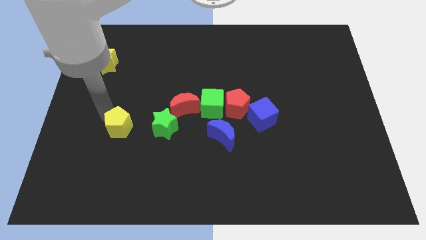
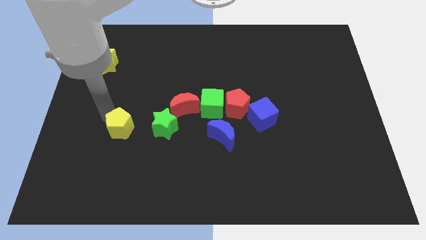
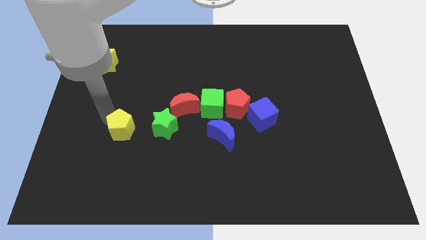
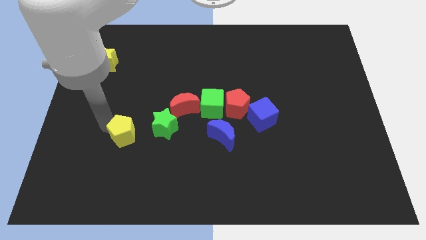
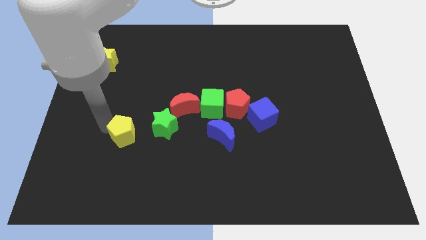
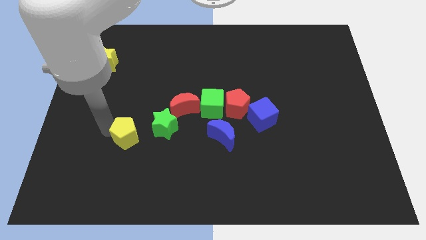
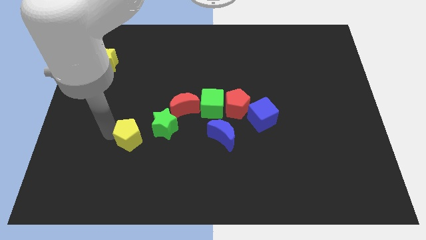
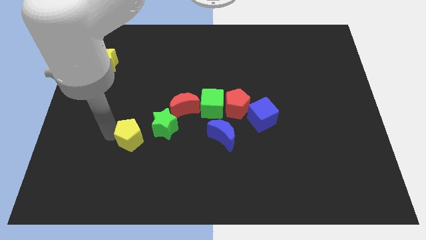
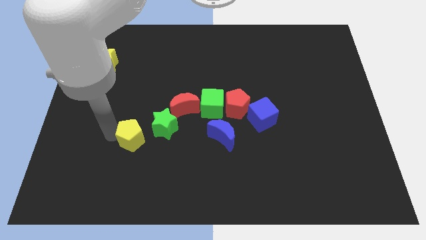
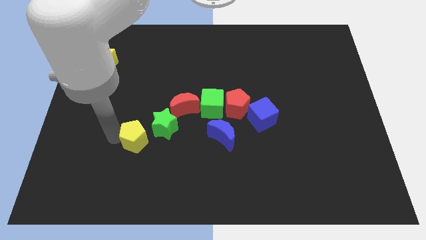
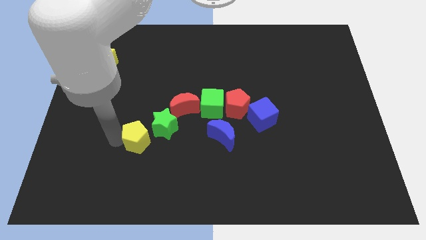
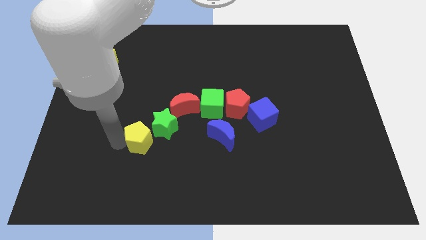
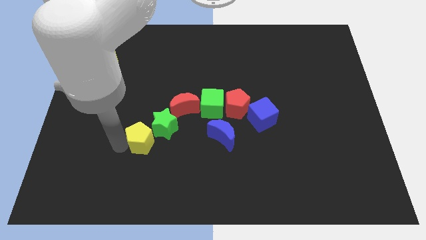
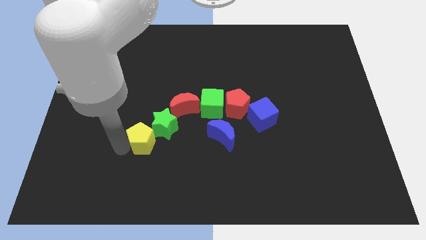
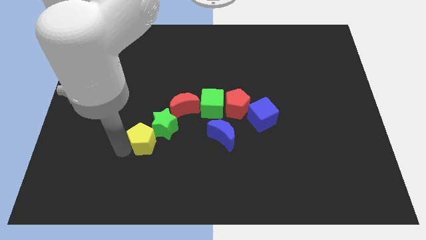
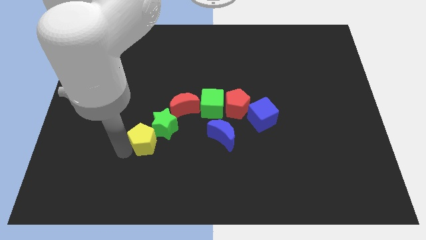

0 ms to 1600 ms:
move the yellow pentagon closer to the left of the green star

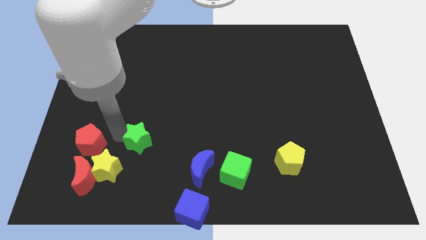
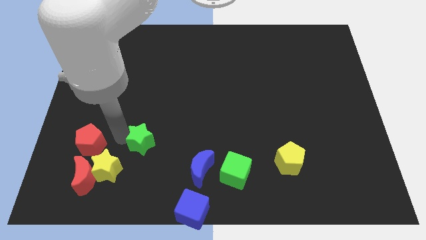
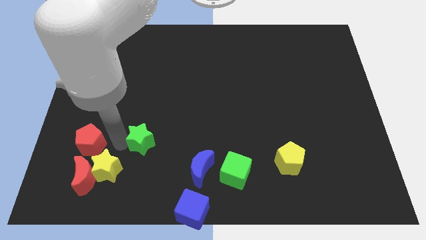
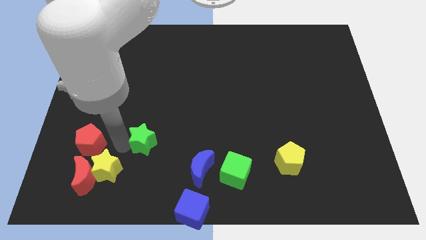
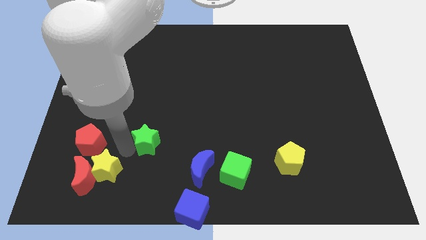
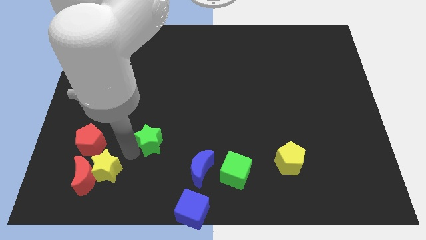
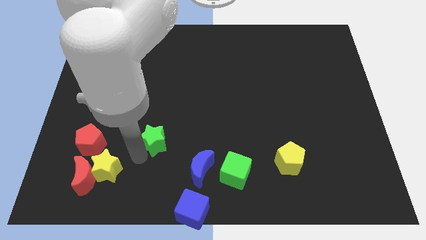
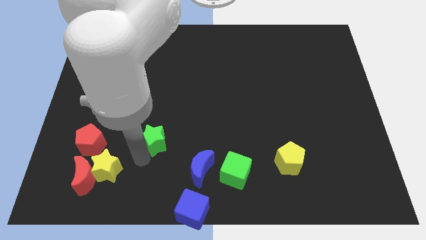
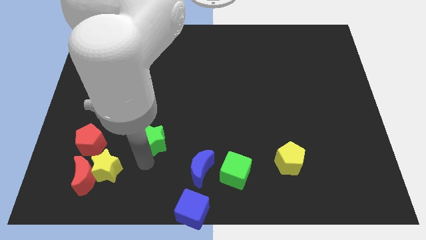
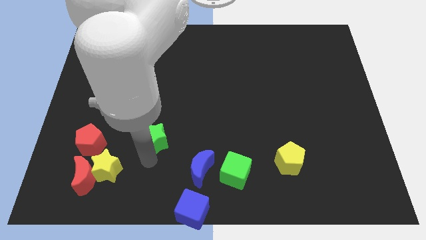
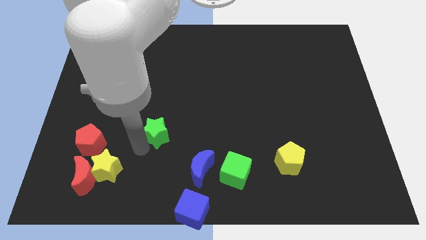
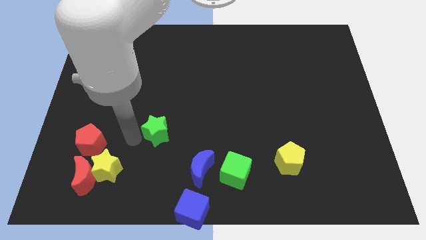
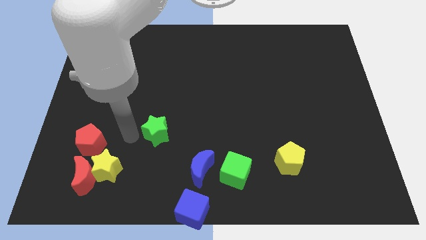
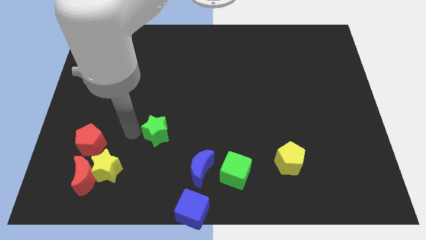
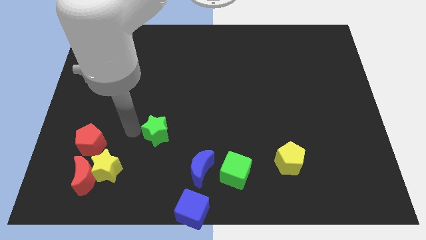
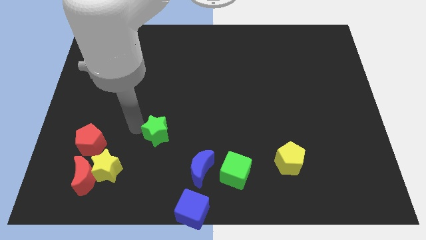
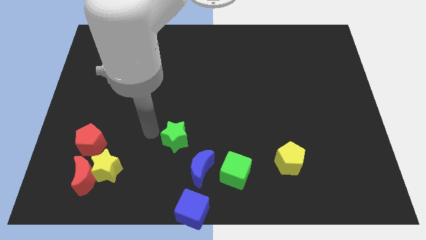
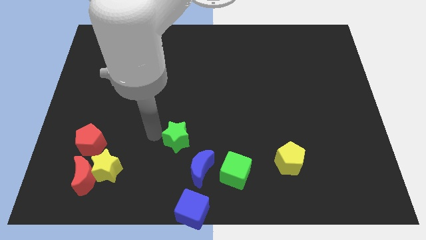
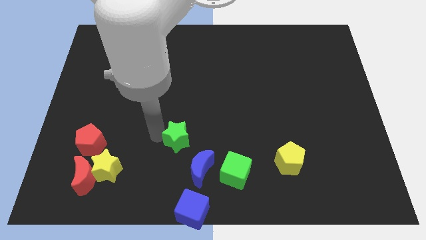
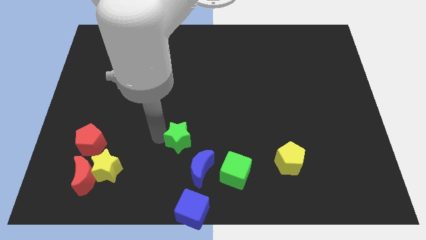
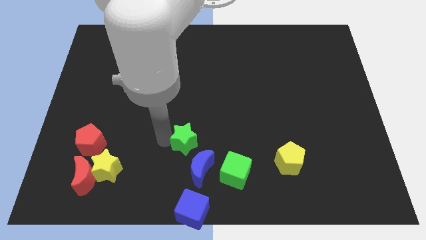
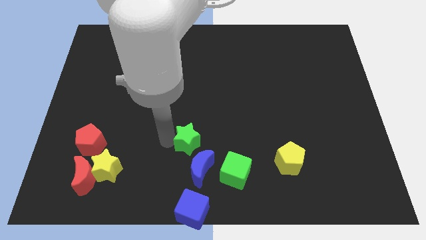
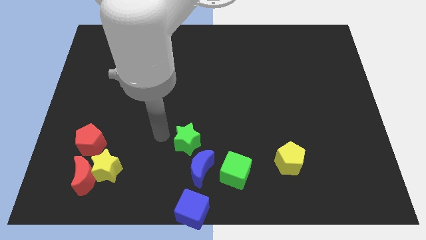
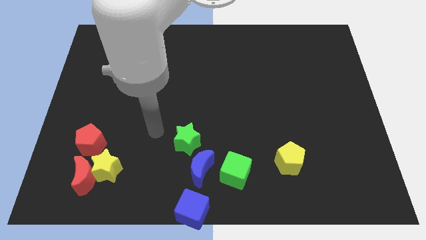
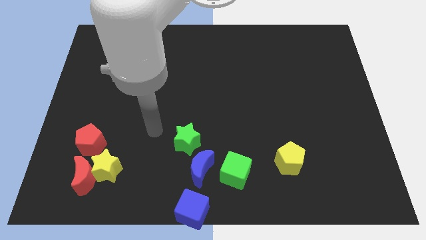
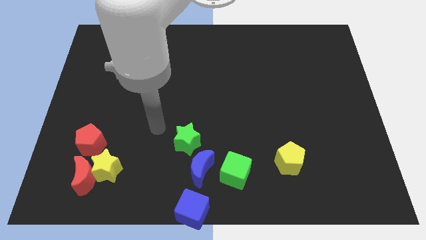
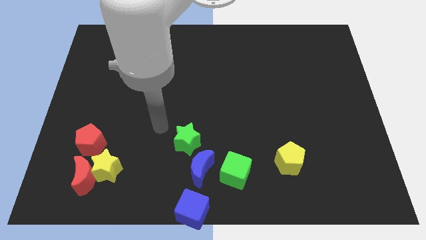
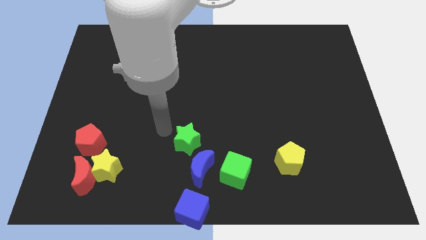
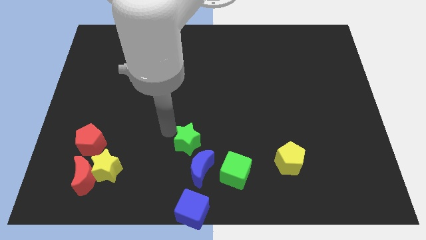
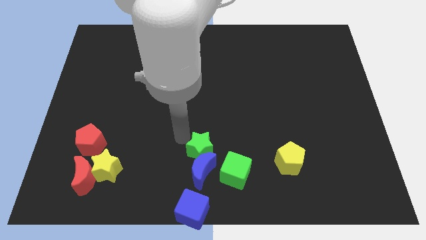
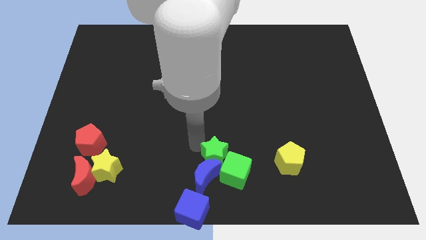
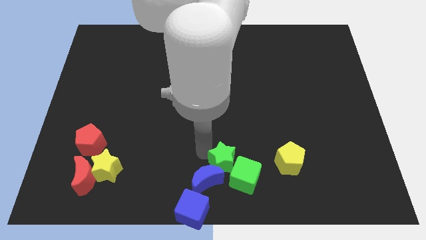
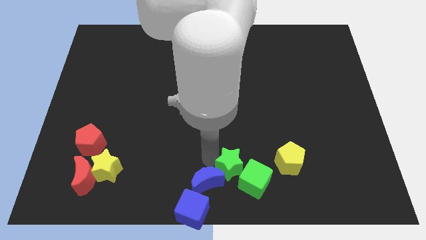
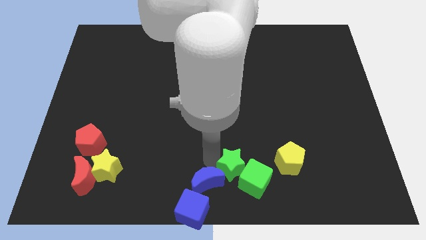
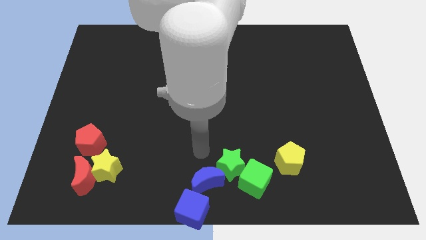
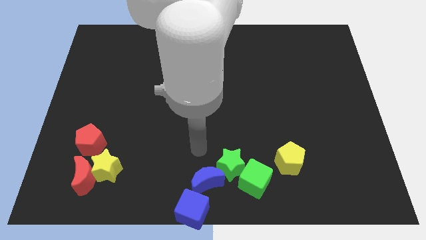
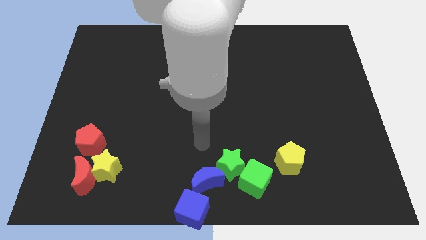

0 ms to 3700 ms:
push the green star into the green cube

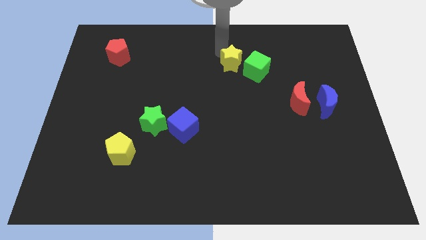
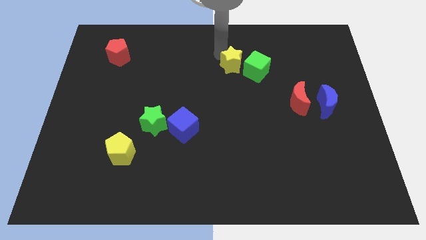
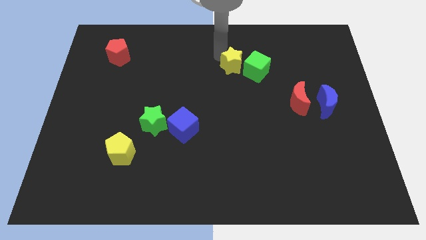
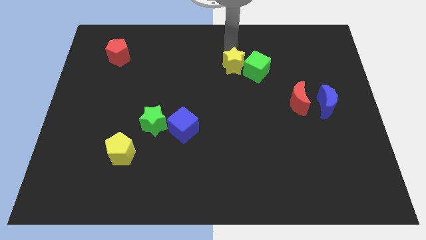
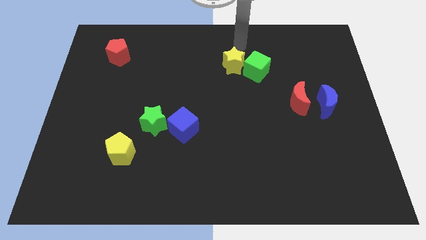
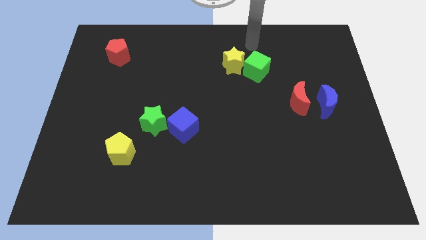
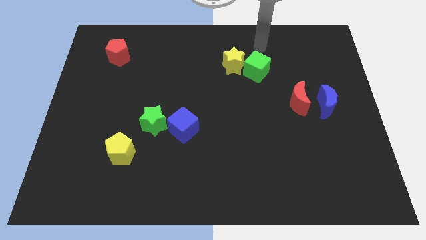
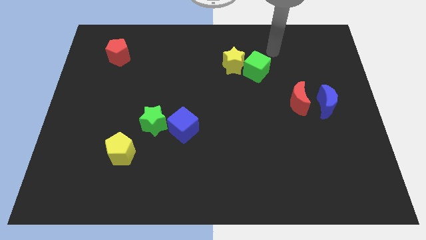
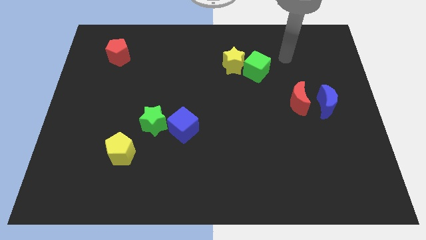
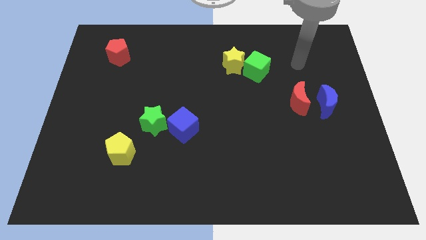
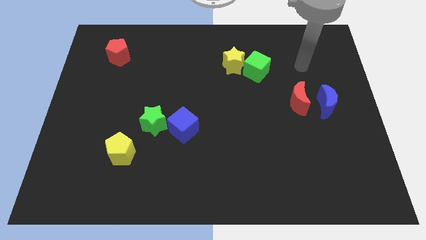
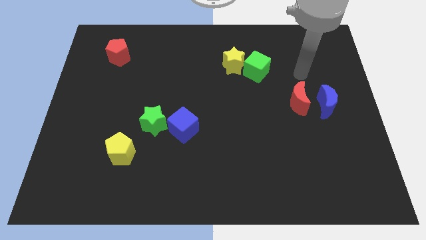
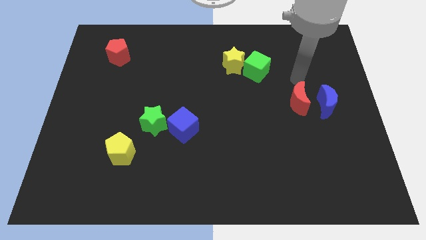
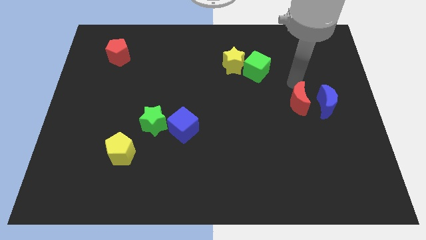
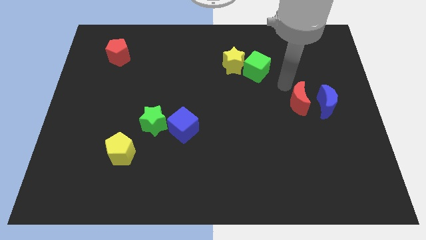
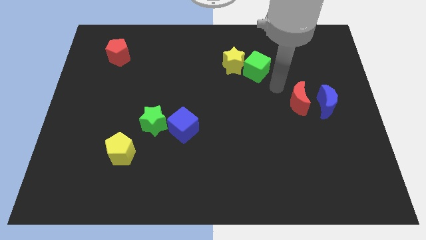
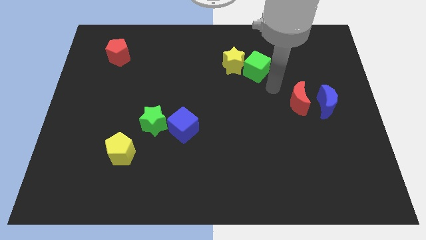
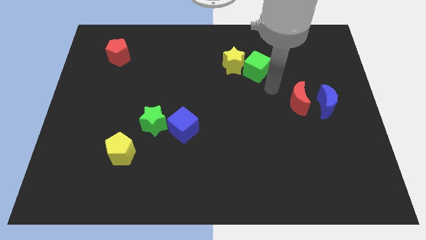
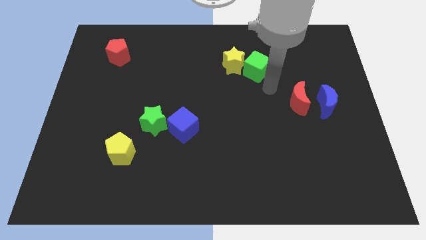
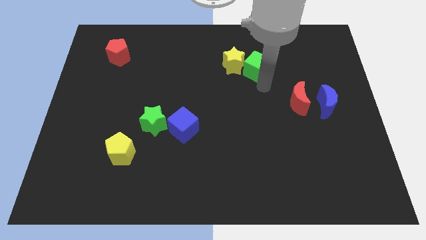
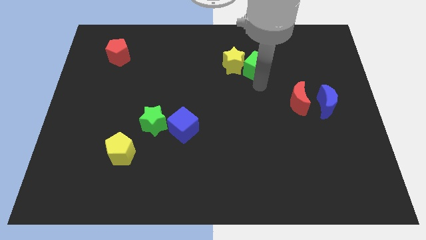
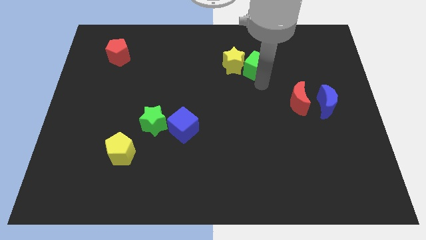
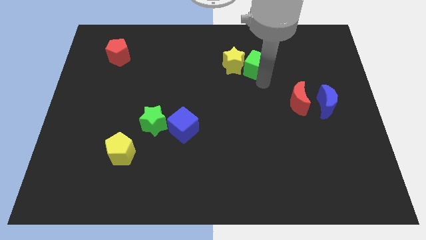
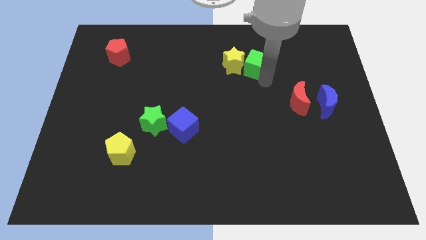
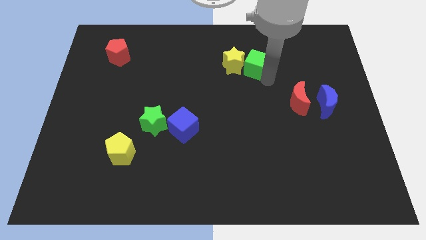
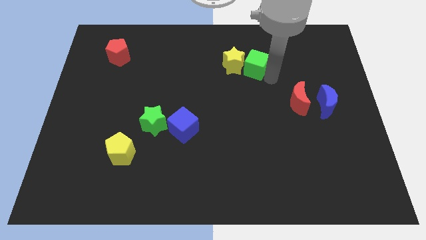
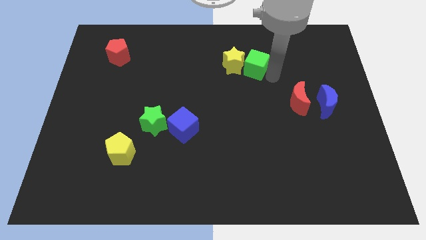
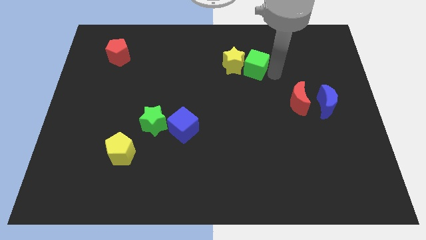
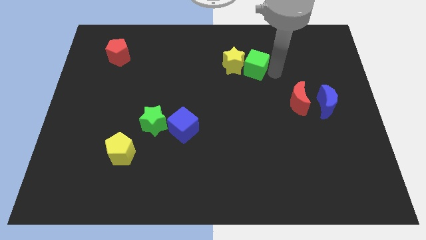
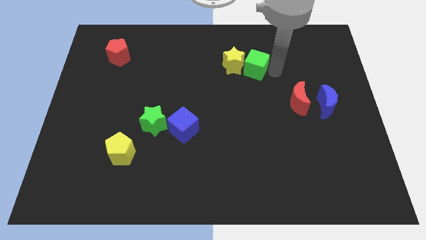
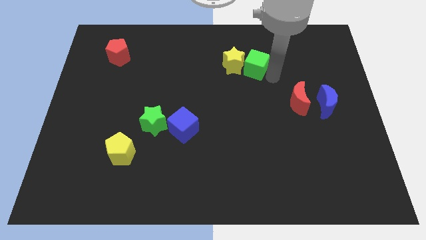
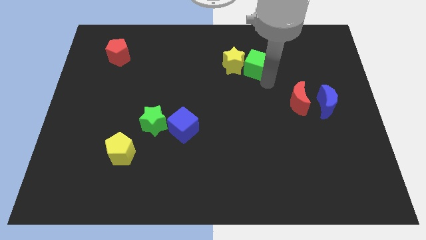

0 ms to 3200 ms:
place your arm to the right of green cube

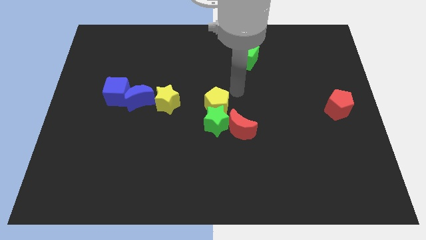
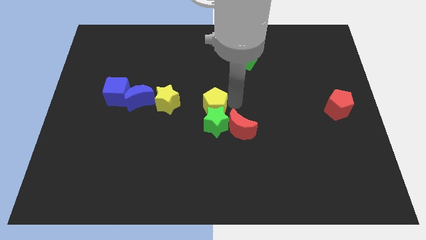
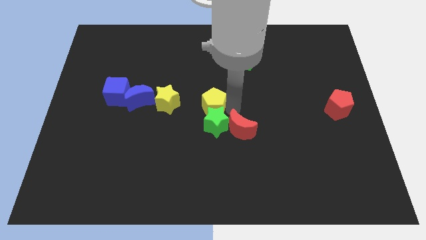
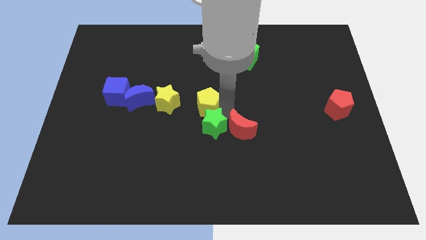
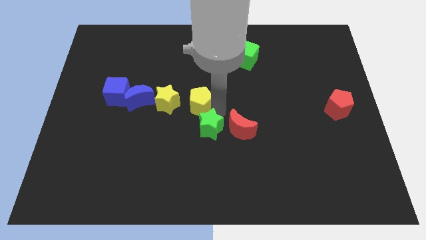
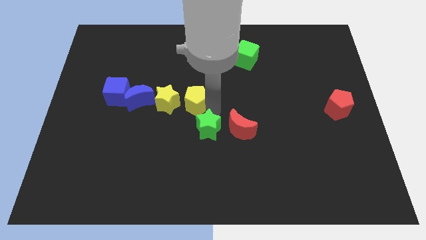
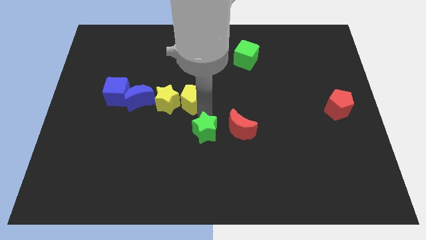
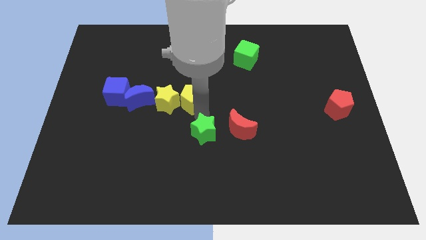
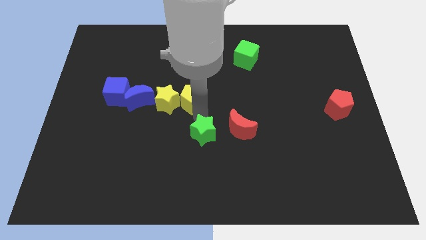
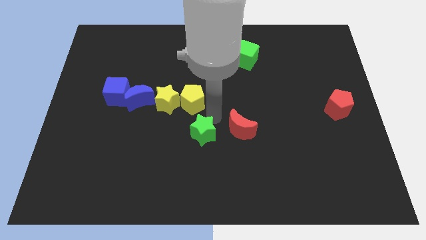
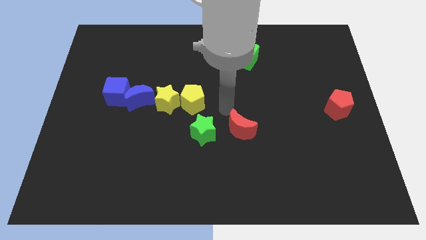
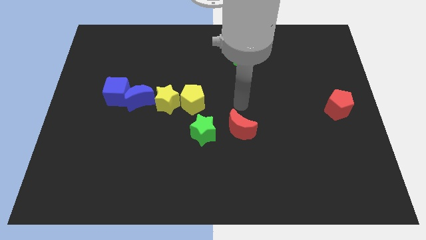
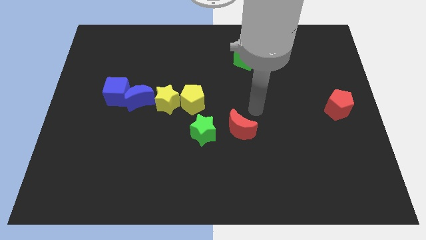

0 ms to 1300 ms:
move the yellow pentagon right to the yellow star
